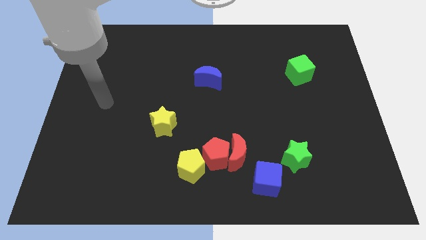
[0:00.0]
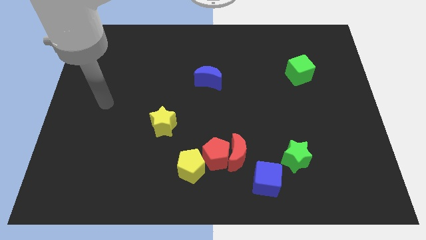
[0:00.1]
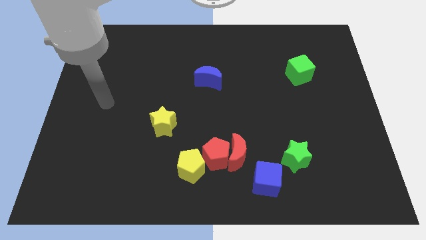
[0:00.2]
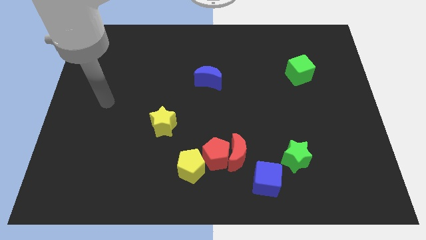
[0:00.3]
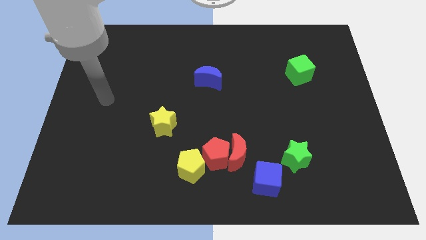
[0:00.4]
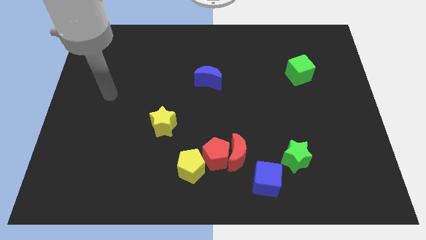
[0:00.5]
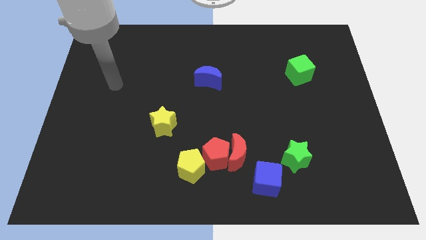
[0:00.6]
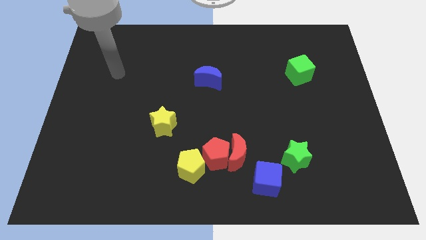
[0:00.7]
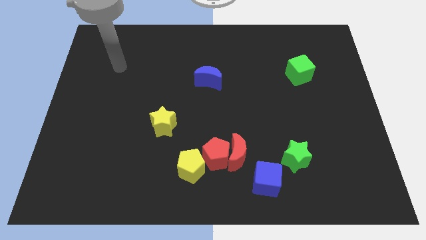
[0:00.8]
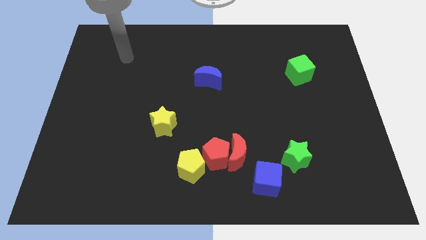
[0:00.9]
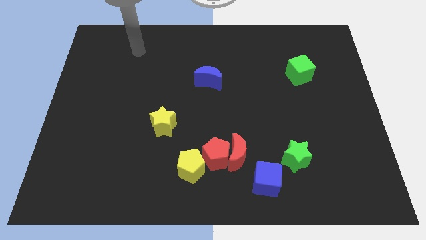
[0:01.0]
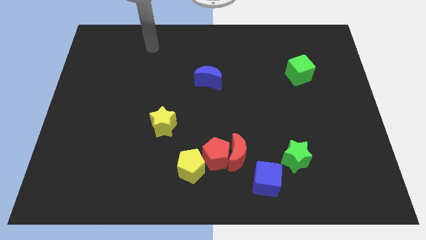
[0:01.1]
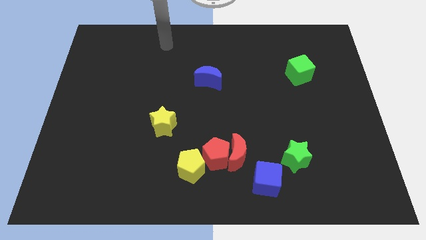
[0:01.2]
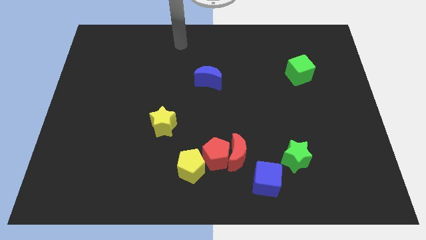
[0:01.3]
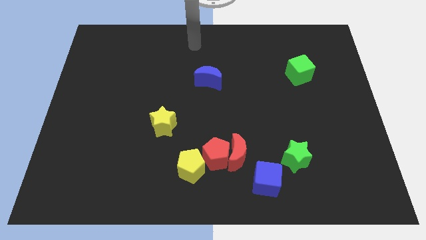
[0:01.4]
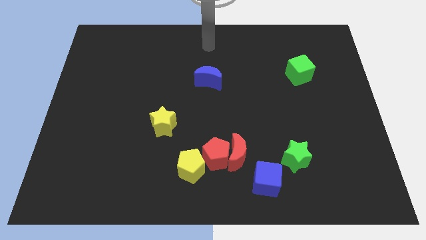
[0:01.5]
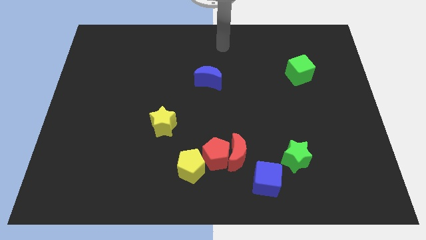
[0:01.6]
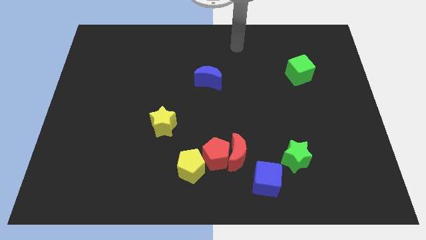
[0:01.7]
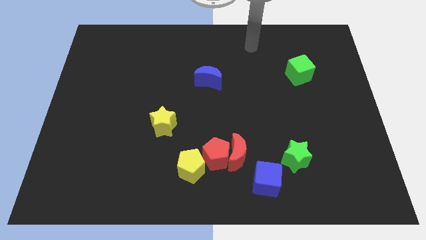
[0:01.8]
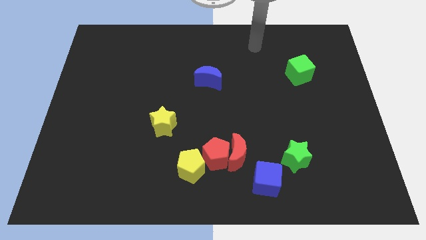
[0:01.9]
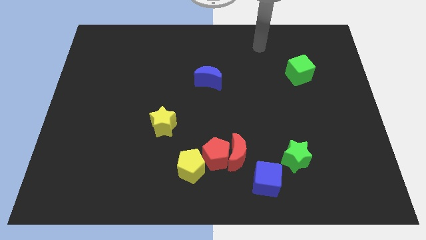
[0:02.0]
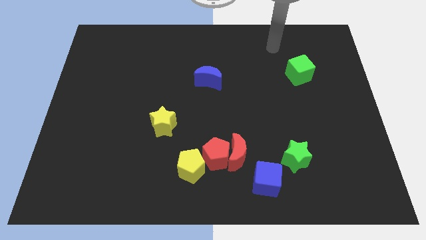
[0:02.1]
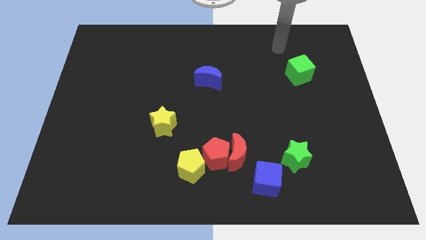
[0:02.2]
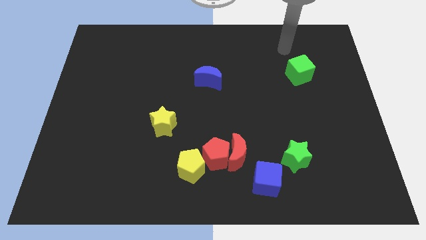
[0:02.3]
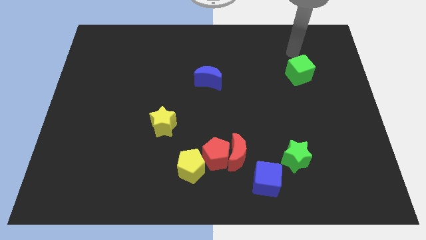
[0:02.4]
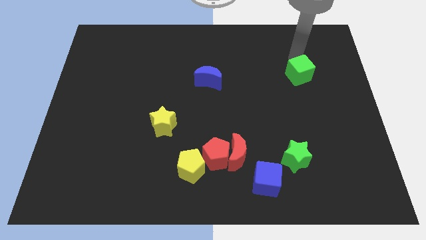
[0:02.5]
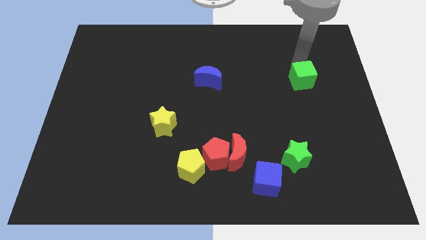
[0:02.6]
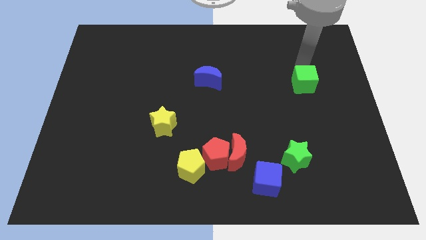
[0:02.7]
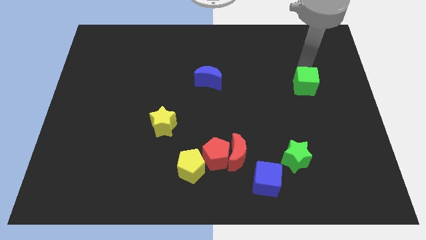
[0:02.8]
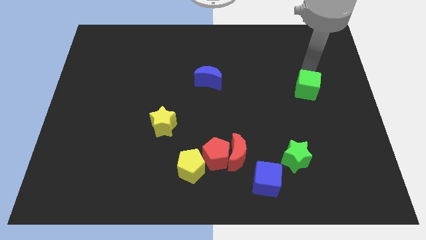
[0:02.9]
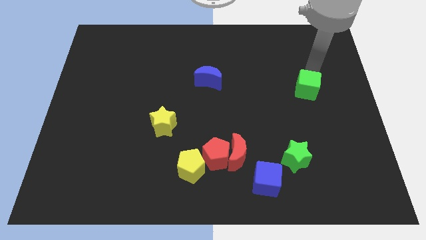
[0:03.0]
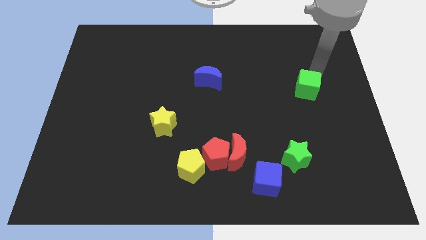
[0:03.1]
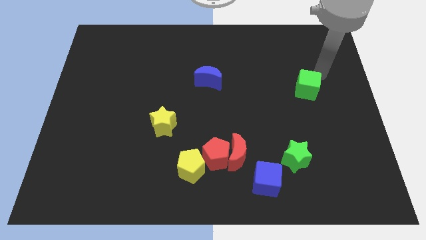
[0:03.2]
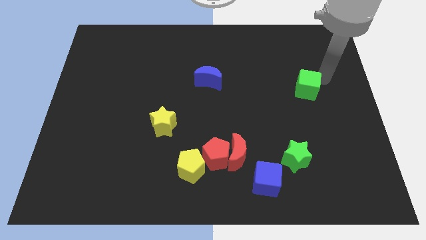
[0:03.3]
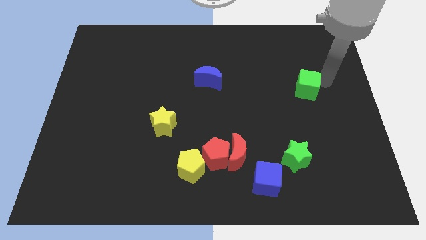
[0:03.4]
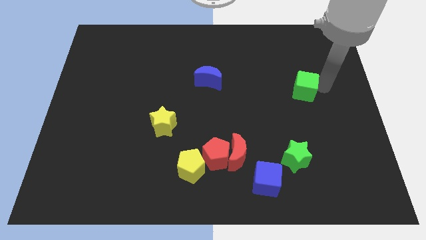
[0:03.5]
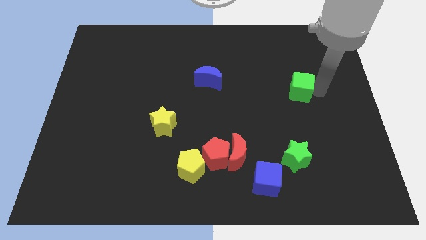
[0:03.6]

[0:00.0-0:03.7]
place green cube to the right of blue moon

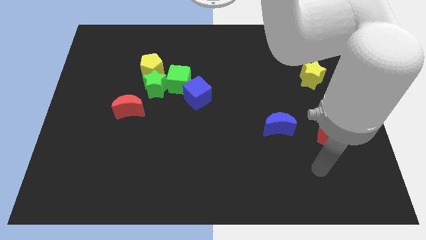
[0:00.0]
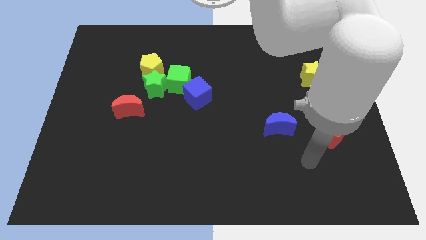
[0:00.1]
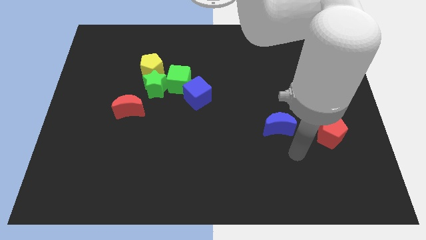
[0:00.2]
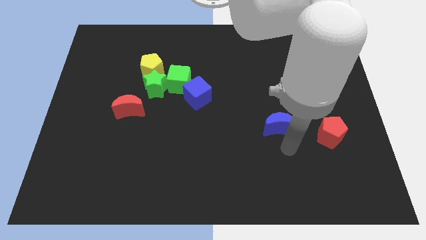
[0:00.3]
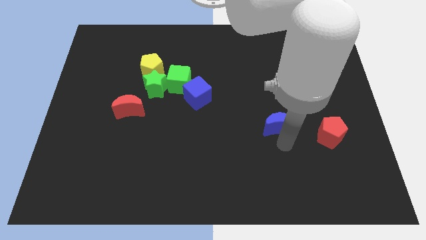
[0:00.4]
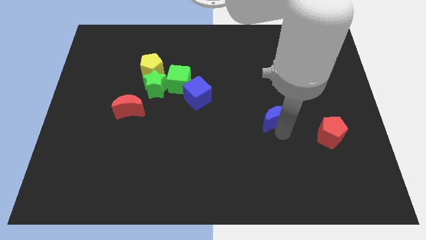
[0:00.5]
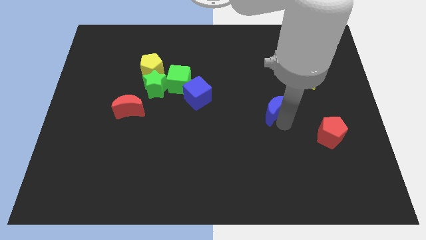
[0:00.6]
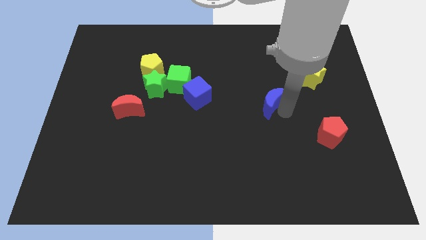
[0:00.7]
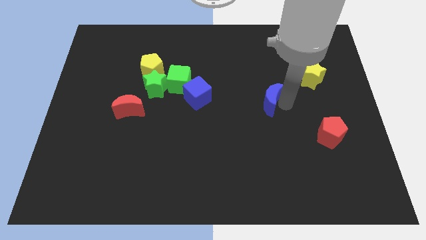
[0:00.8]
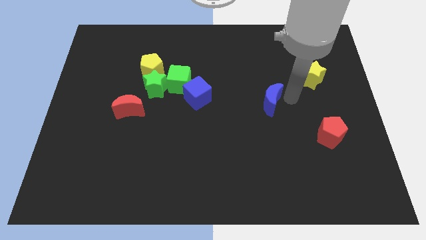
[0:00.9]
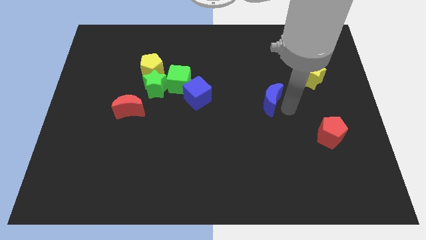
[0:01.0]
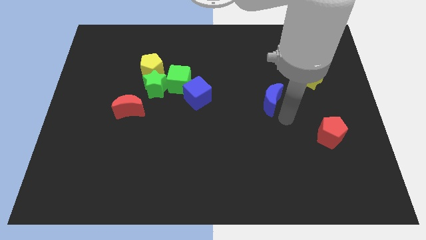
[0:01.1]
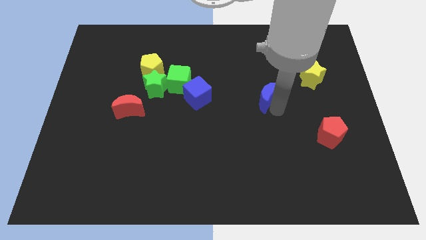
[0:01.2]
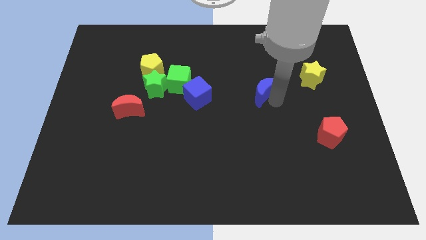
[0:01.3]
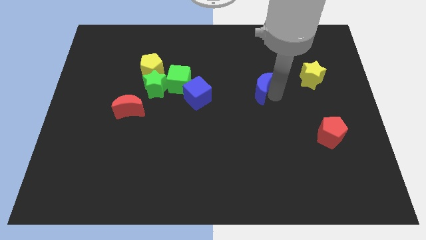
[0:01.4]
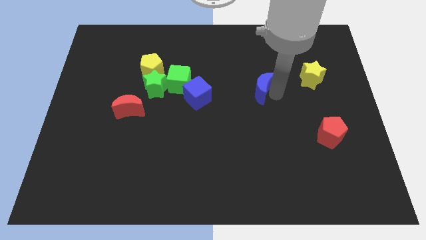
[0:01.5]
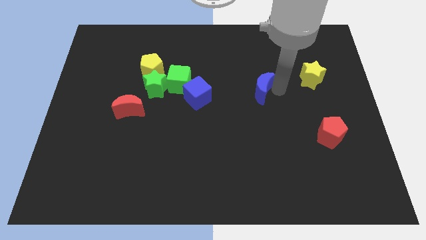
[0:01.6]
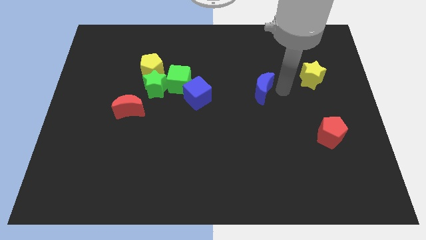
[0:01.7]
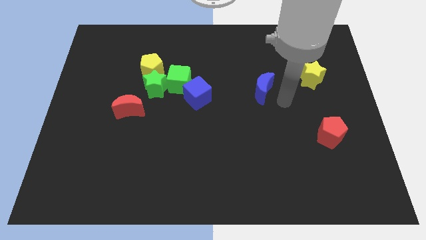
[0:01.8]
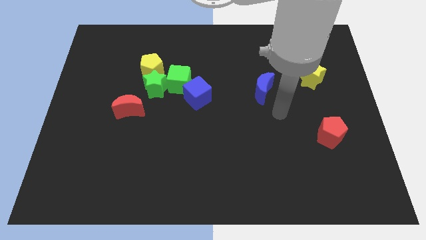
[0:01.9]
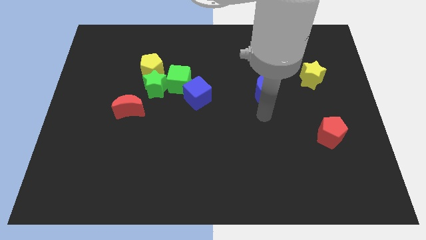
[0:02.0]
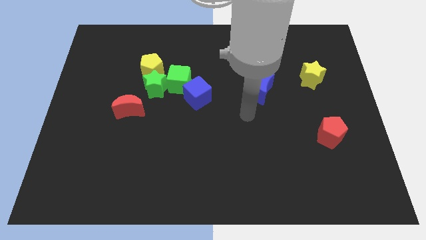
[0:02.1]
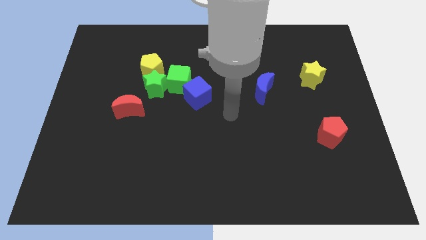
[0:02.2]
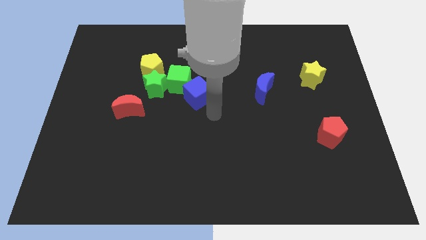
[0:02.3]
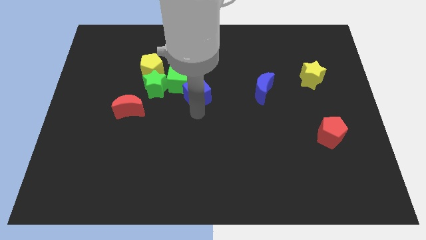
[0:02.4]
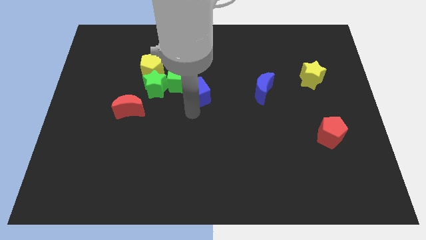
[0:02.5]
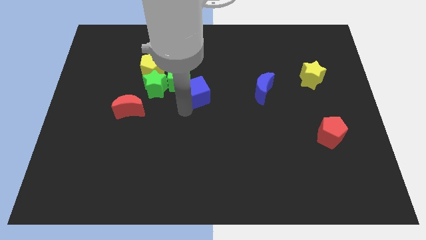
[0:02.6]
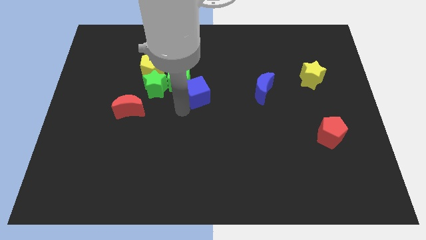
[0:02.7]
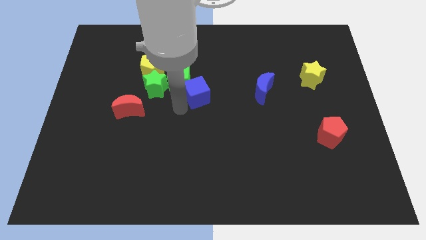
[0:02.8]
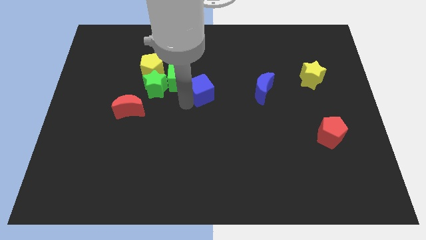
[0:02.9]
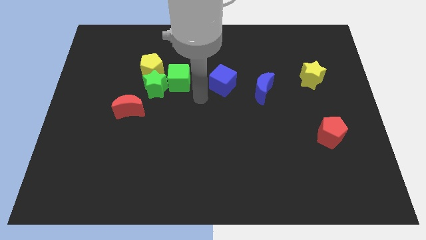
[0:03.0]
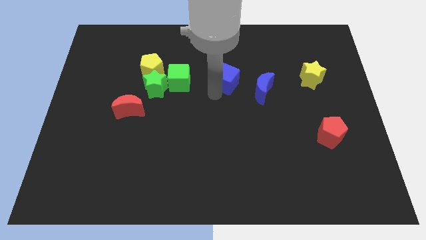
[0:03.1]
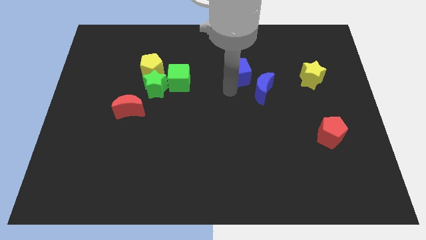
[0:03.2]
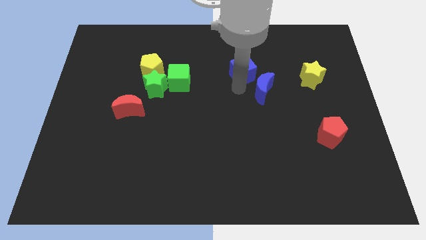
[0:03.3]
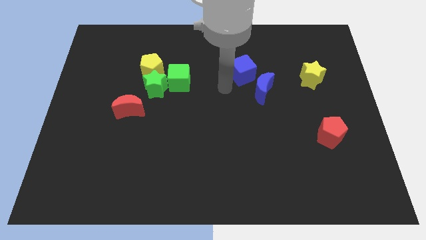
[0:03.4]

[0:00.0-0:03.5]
push the blue blocks towards the top side of the board

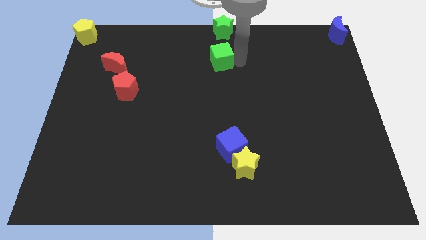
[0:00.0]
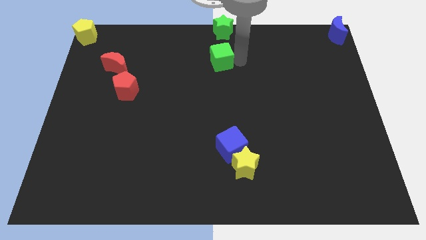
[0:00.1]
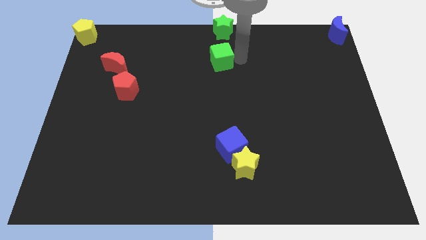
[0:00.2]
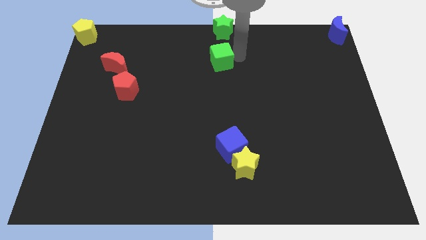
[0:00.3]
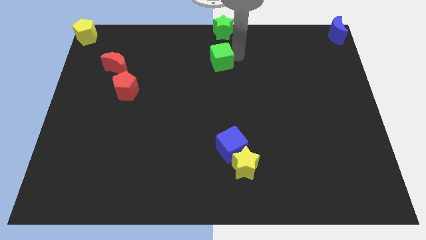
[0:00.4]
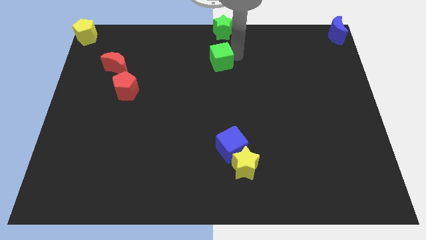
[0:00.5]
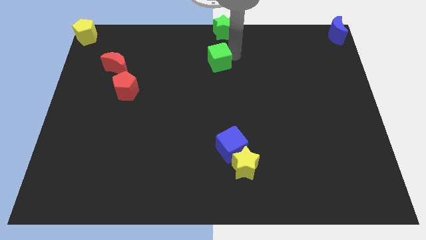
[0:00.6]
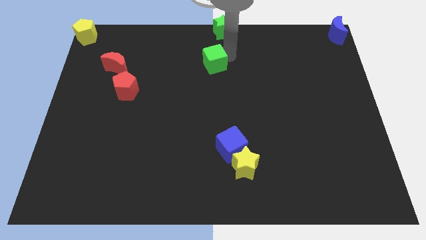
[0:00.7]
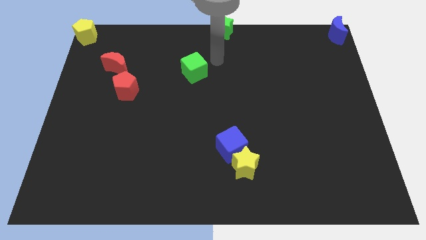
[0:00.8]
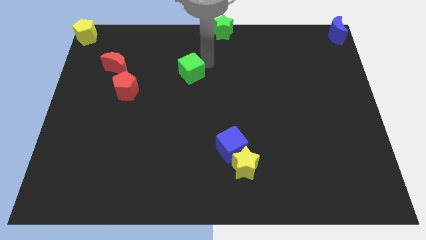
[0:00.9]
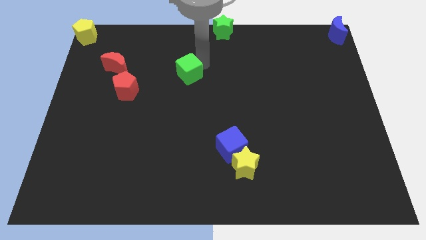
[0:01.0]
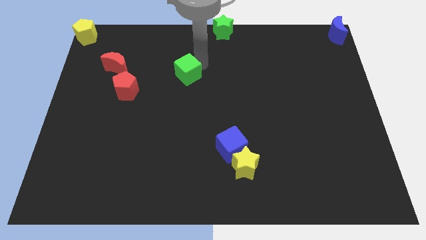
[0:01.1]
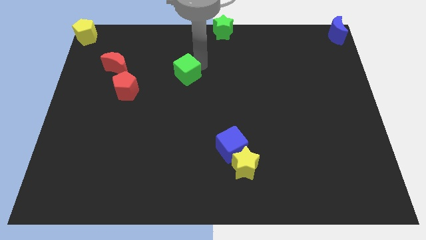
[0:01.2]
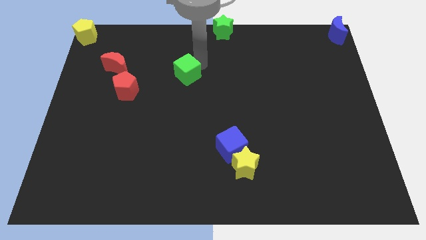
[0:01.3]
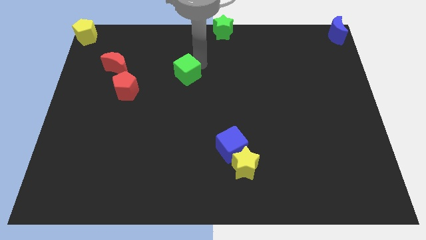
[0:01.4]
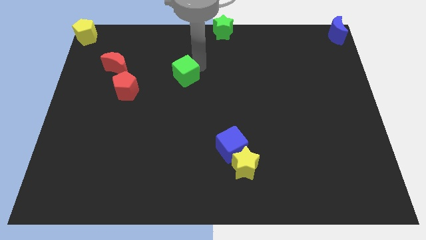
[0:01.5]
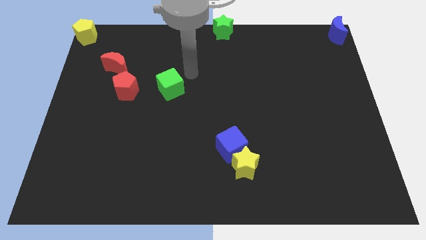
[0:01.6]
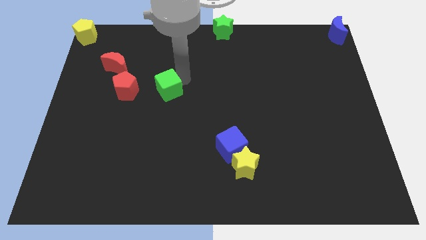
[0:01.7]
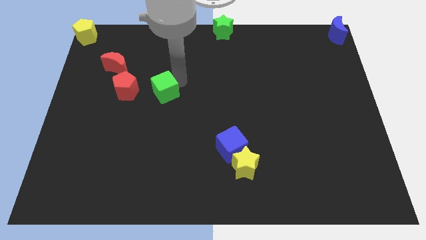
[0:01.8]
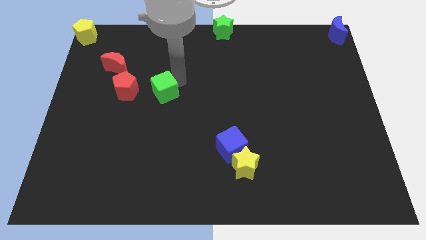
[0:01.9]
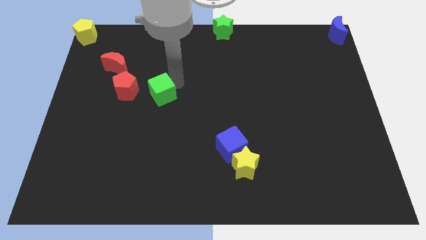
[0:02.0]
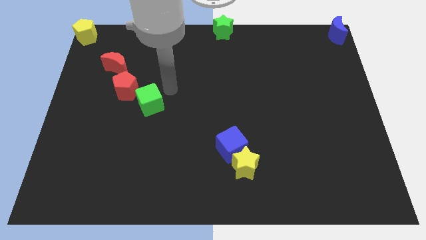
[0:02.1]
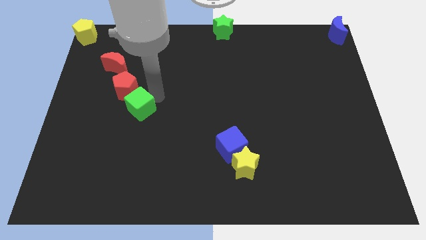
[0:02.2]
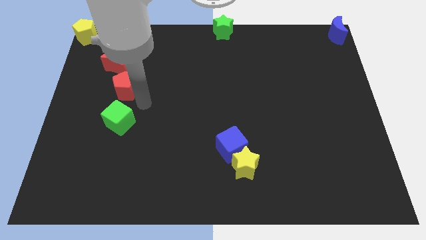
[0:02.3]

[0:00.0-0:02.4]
push the green cube below the red pentagon
